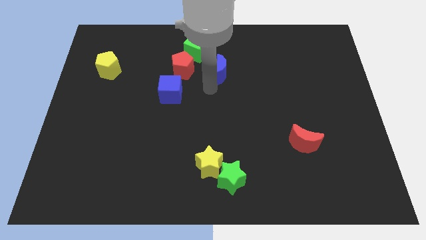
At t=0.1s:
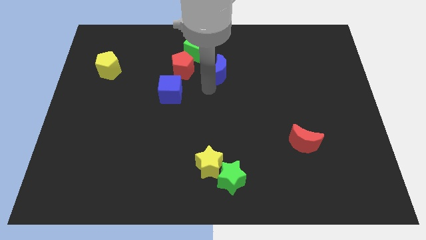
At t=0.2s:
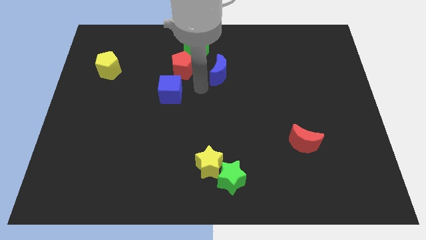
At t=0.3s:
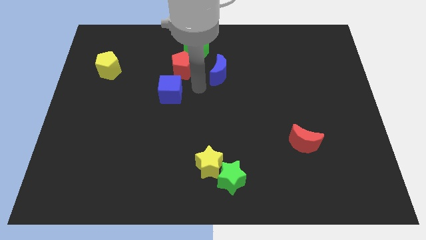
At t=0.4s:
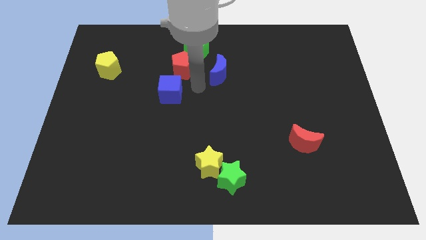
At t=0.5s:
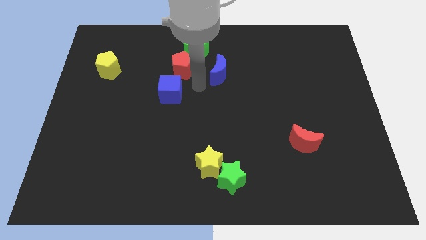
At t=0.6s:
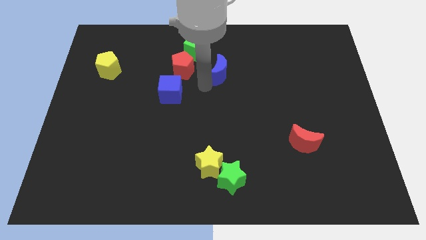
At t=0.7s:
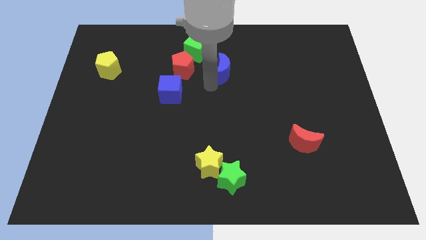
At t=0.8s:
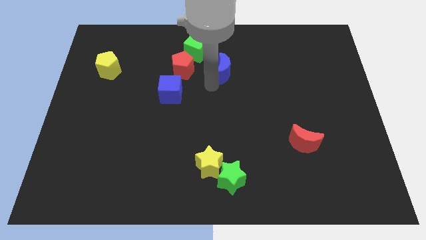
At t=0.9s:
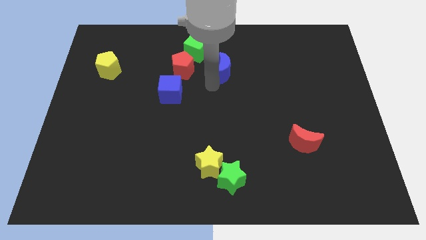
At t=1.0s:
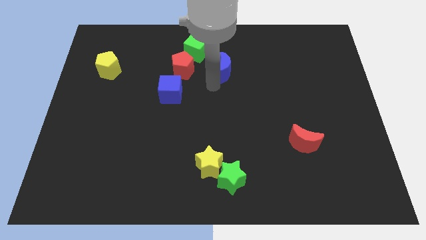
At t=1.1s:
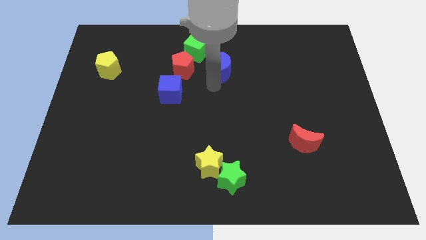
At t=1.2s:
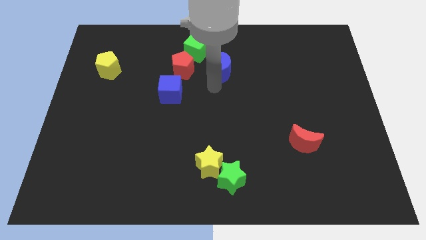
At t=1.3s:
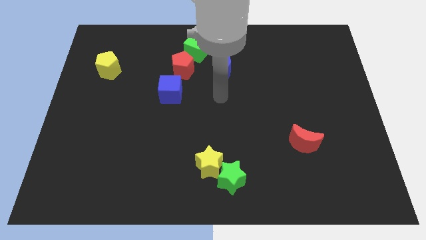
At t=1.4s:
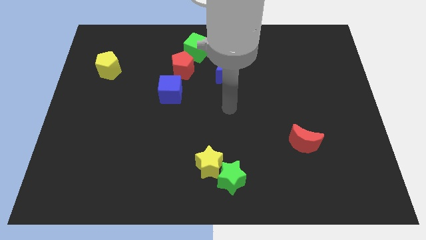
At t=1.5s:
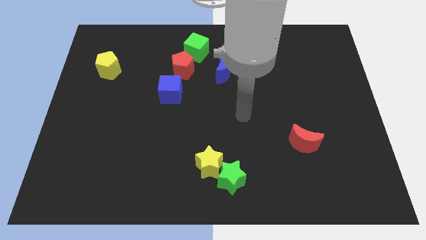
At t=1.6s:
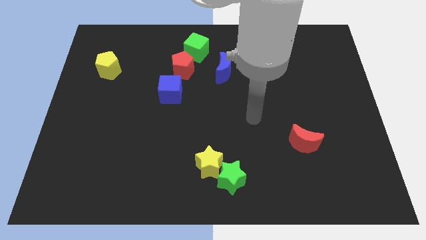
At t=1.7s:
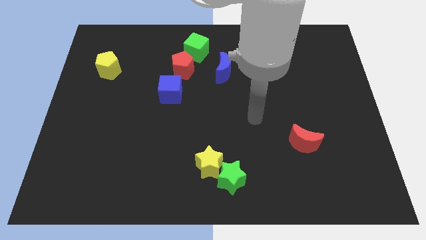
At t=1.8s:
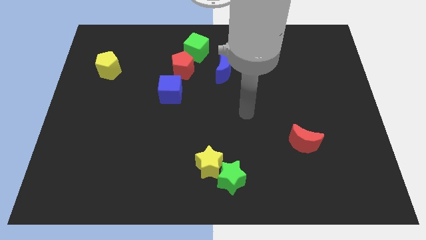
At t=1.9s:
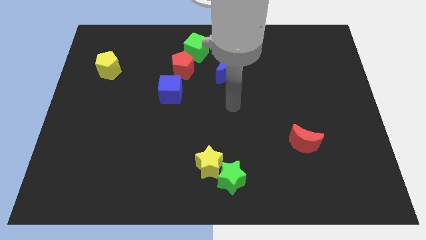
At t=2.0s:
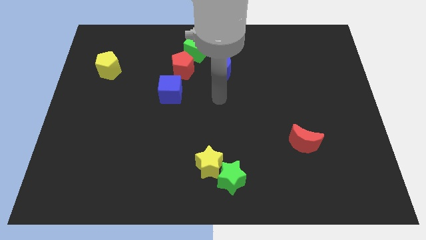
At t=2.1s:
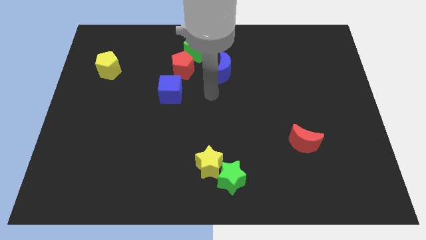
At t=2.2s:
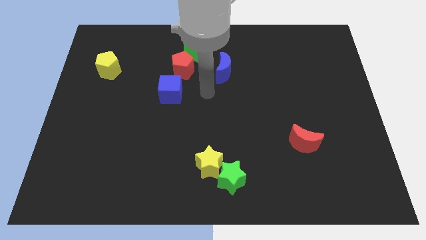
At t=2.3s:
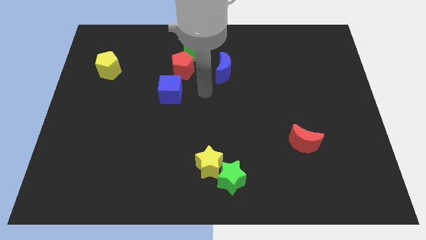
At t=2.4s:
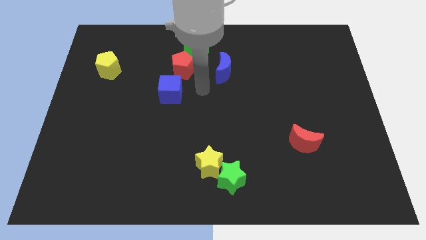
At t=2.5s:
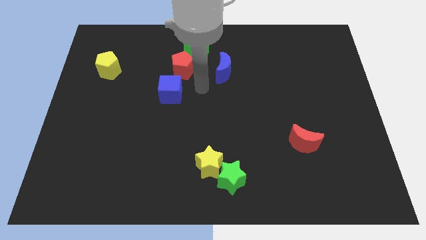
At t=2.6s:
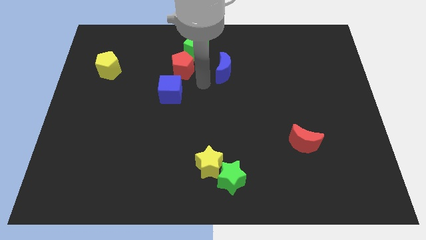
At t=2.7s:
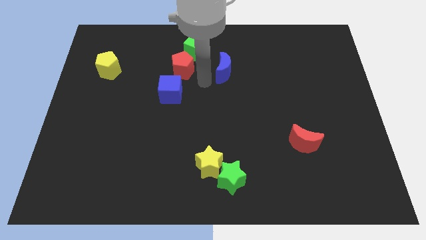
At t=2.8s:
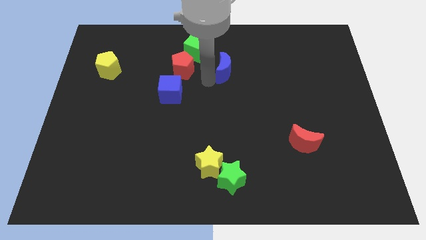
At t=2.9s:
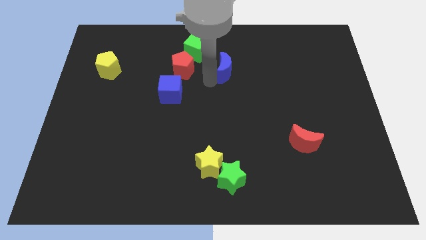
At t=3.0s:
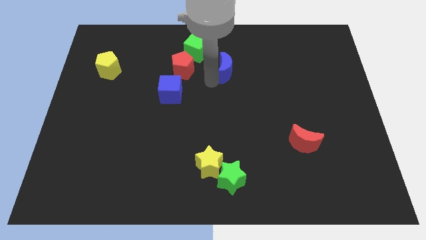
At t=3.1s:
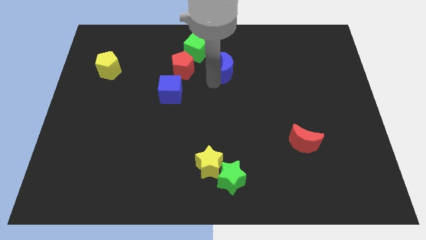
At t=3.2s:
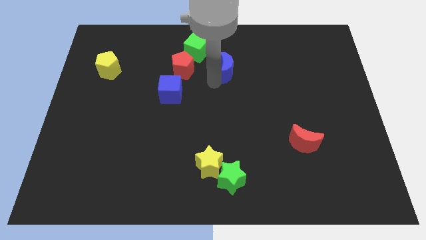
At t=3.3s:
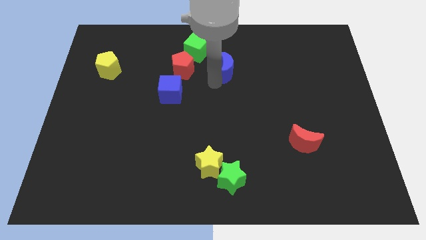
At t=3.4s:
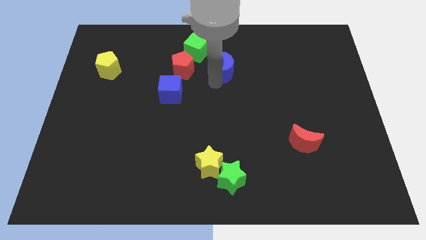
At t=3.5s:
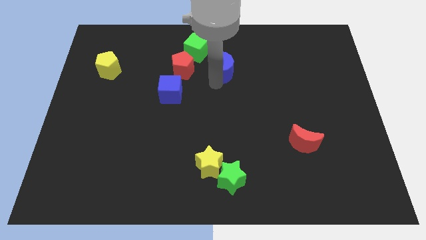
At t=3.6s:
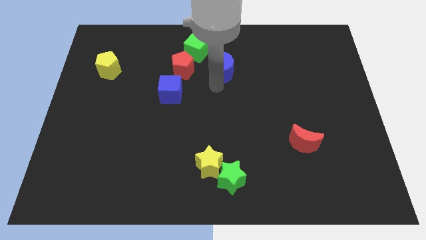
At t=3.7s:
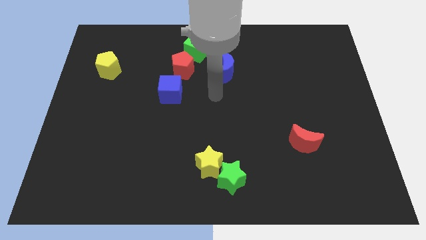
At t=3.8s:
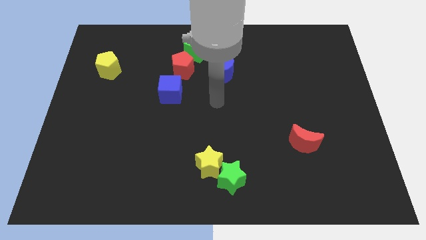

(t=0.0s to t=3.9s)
move the blue moon to the right side of the red pentagon

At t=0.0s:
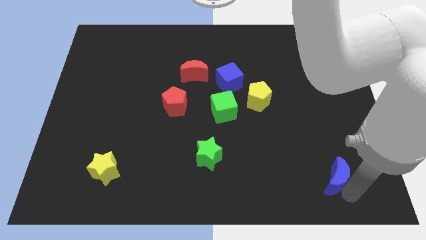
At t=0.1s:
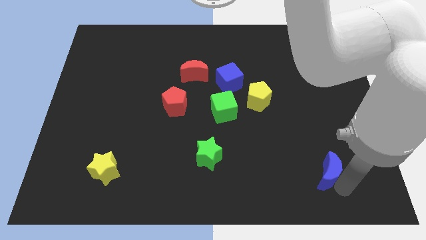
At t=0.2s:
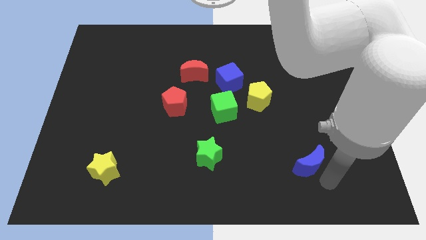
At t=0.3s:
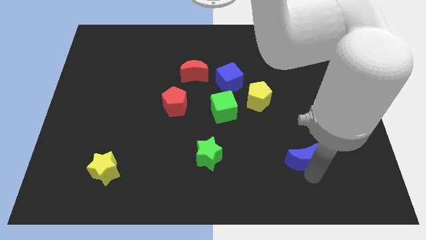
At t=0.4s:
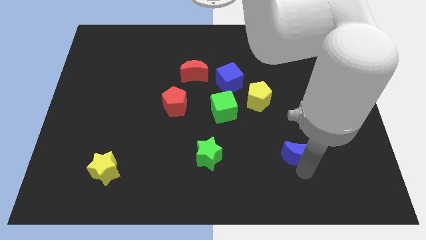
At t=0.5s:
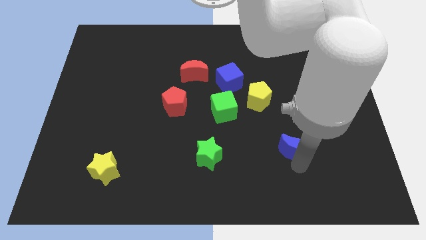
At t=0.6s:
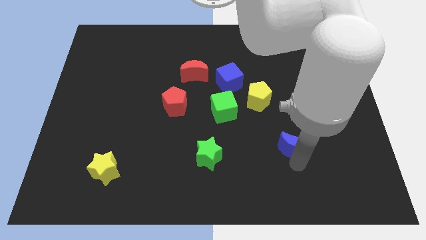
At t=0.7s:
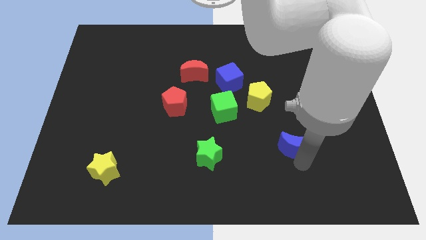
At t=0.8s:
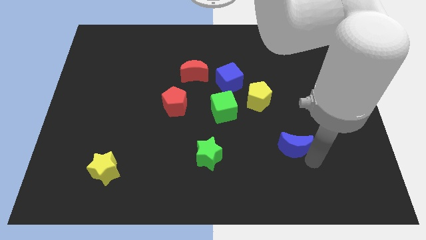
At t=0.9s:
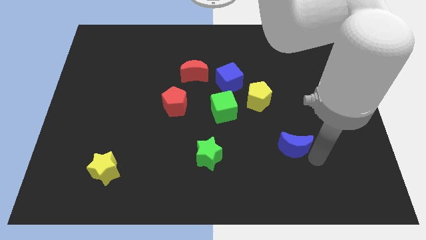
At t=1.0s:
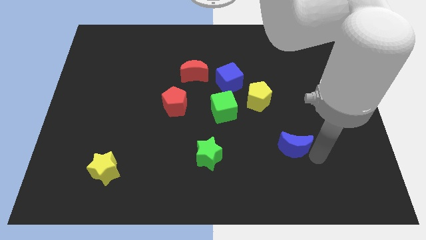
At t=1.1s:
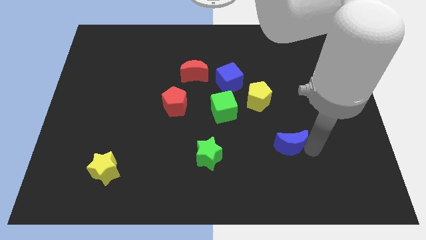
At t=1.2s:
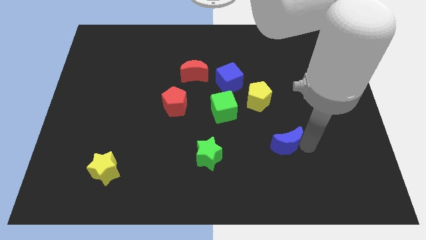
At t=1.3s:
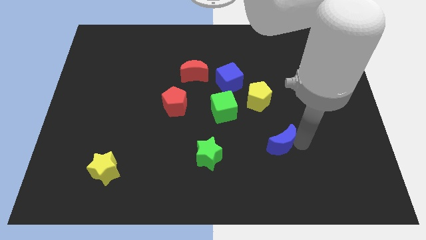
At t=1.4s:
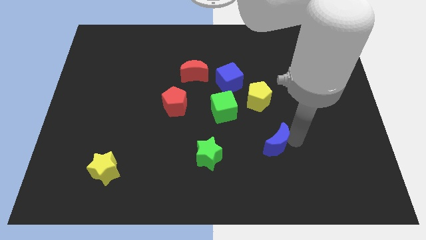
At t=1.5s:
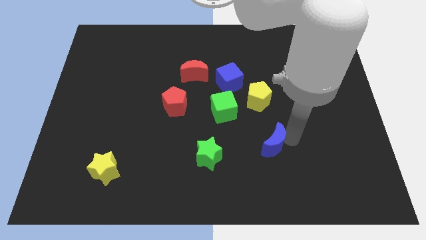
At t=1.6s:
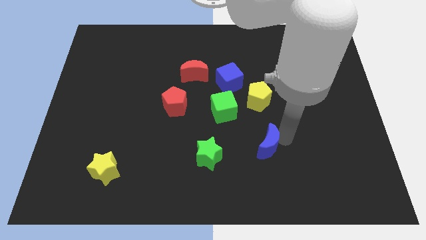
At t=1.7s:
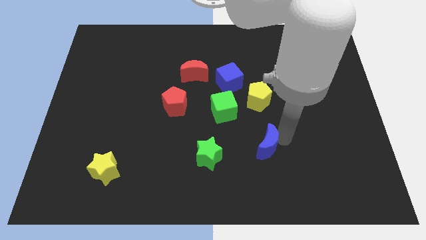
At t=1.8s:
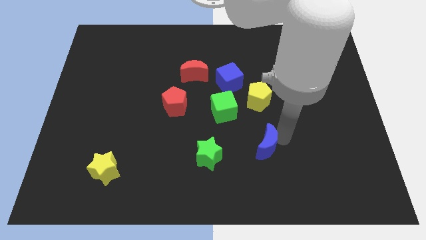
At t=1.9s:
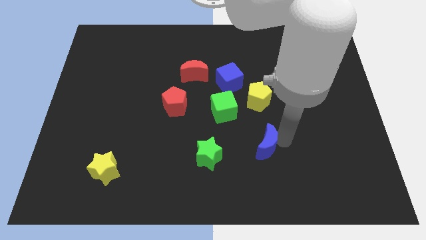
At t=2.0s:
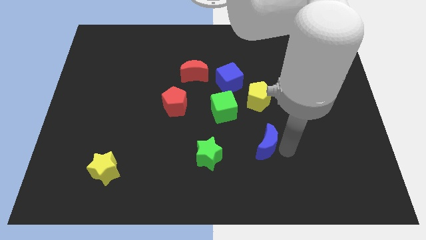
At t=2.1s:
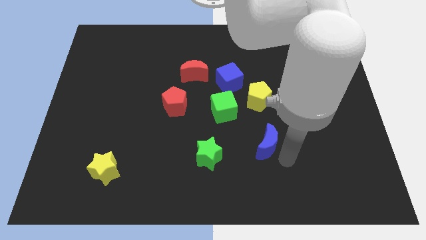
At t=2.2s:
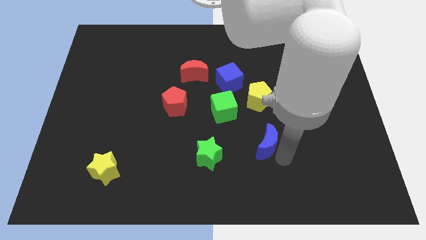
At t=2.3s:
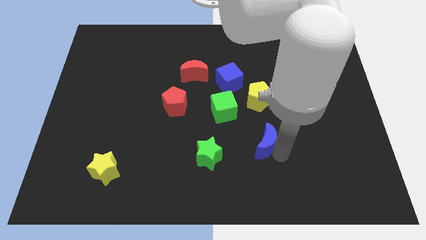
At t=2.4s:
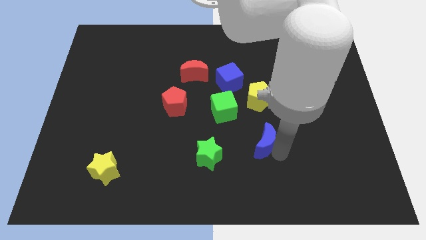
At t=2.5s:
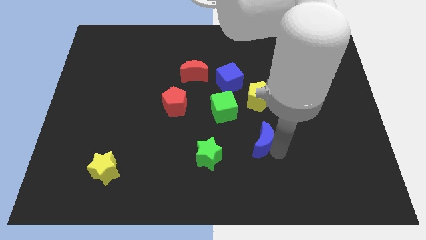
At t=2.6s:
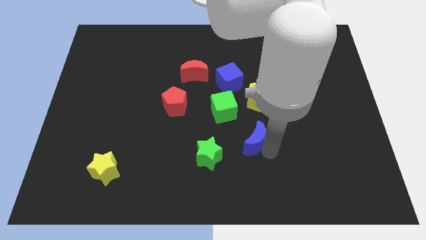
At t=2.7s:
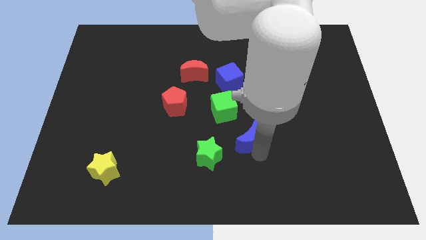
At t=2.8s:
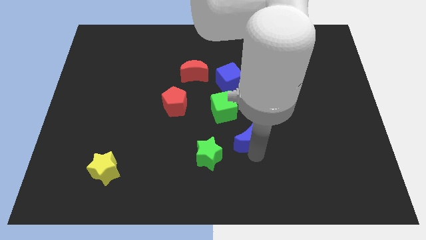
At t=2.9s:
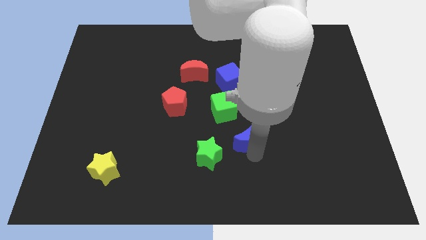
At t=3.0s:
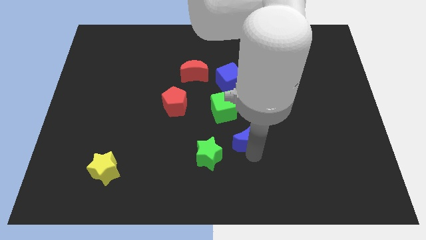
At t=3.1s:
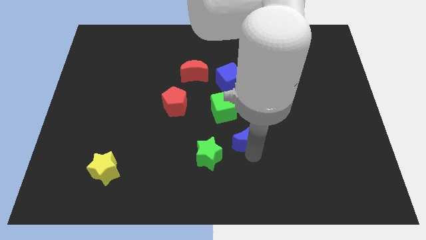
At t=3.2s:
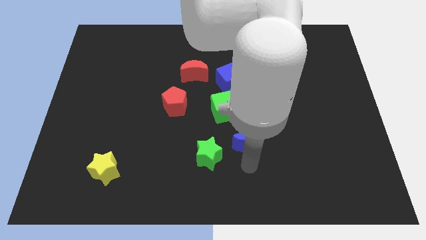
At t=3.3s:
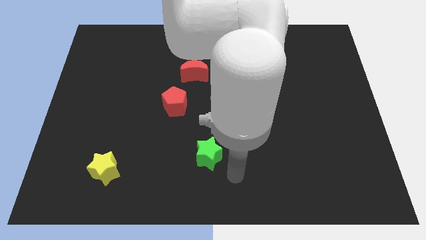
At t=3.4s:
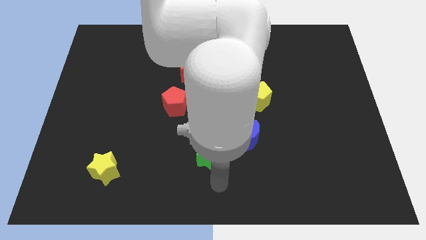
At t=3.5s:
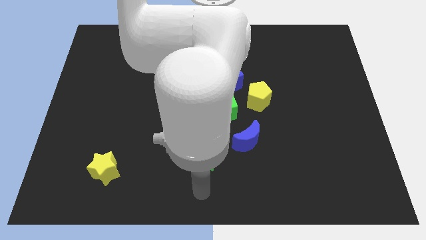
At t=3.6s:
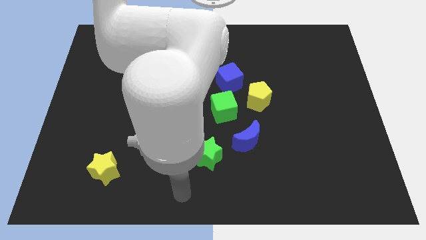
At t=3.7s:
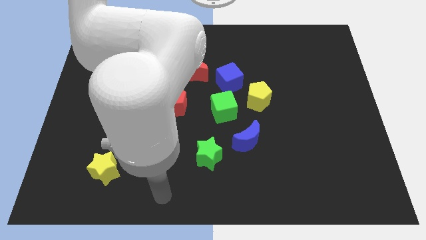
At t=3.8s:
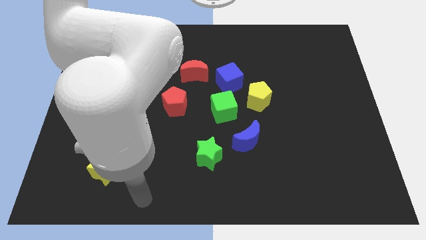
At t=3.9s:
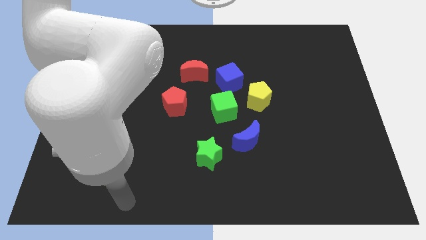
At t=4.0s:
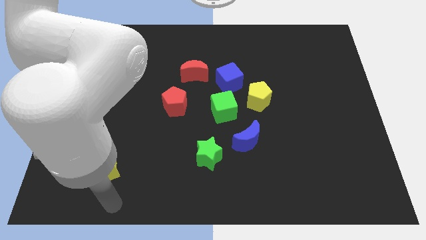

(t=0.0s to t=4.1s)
slightly push the blue crescent towards the green cube

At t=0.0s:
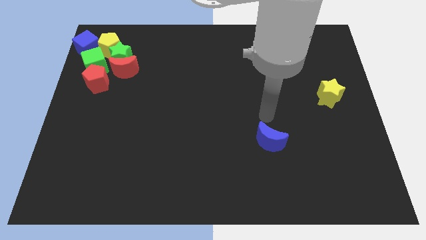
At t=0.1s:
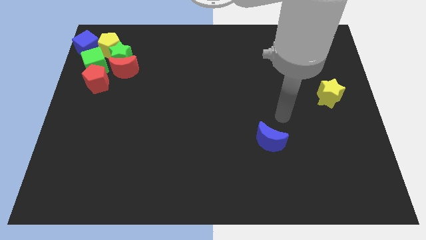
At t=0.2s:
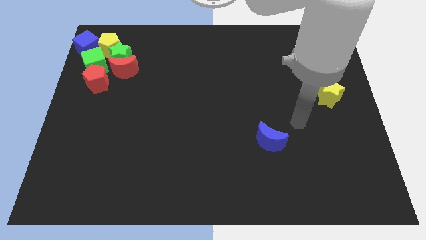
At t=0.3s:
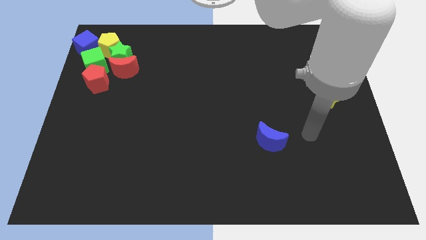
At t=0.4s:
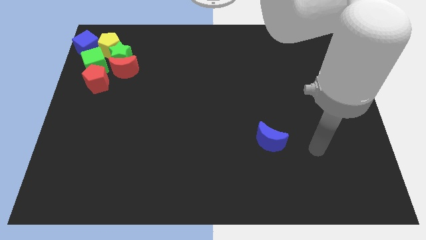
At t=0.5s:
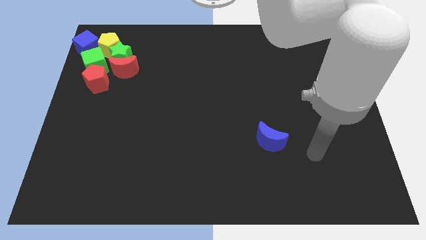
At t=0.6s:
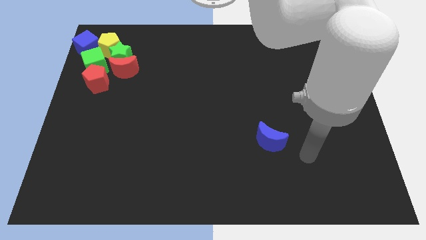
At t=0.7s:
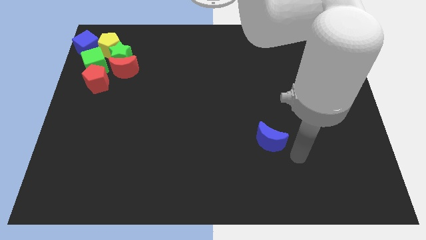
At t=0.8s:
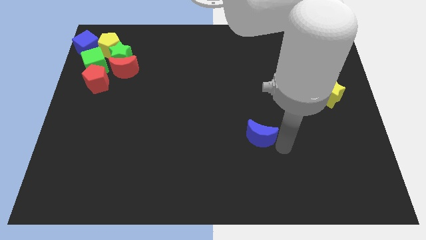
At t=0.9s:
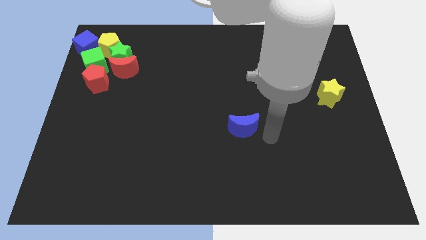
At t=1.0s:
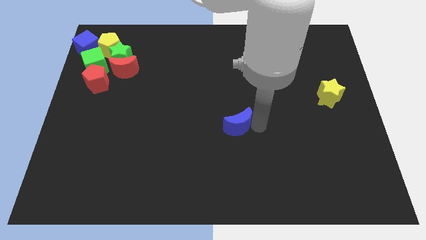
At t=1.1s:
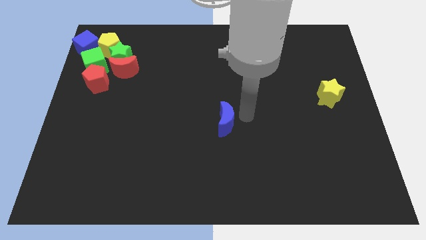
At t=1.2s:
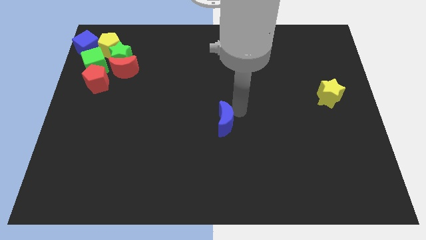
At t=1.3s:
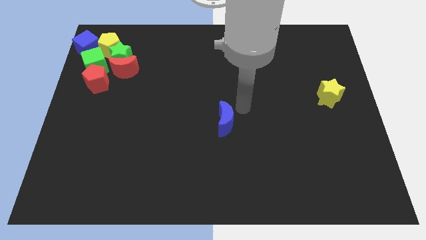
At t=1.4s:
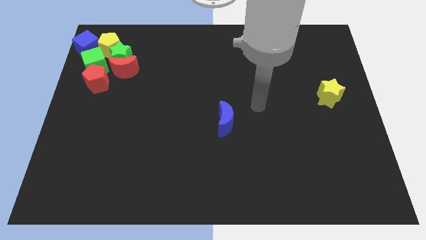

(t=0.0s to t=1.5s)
place the blue moon at the center of the board
